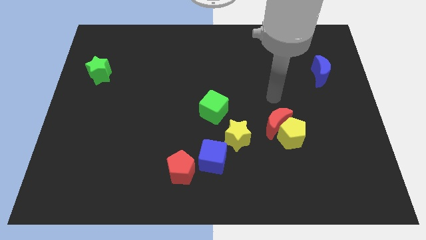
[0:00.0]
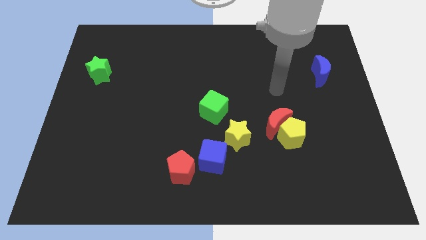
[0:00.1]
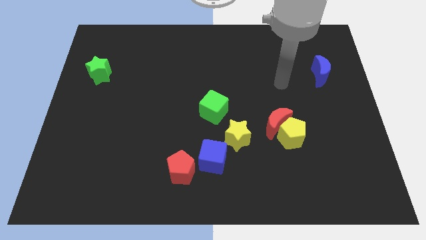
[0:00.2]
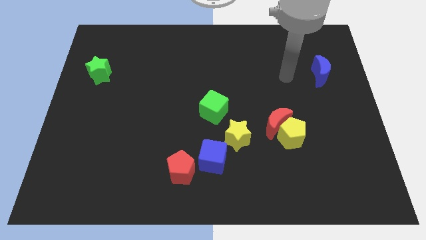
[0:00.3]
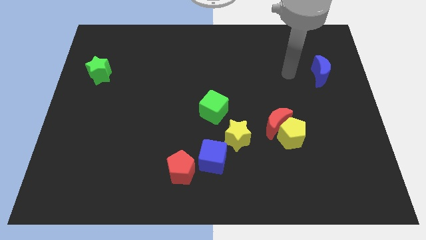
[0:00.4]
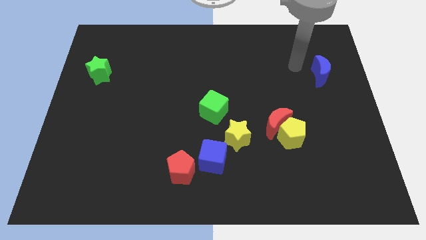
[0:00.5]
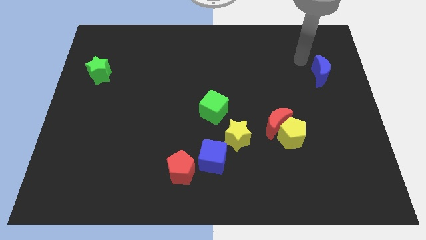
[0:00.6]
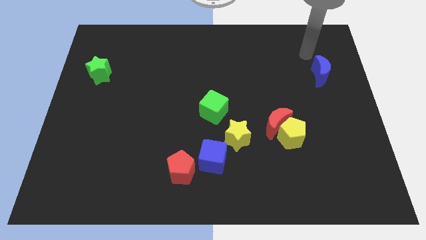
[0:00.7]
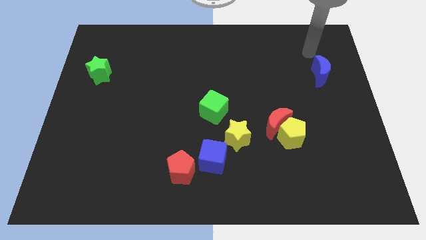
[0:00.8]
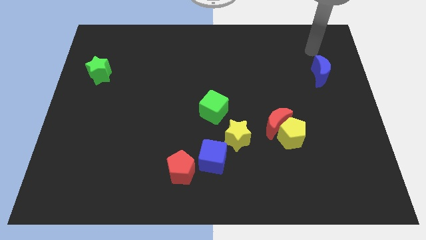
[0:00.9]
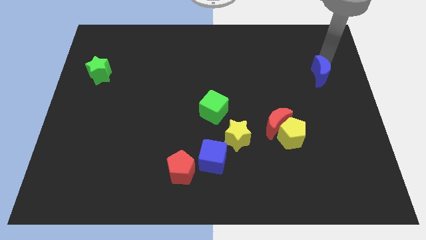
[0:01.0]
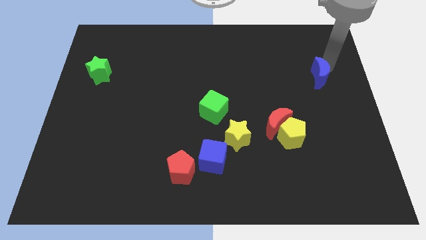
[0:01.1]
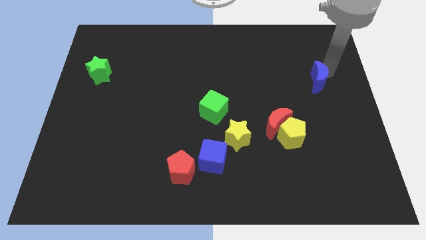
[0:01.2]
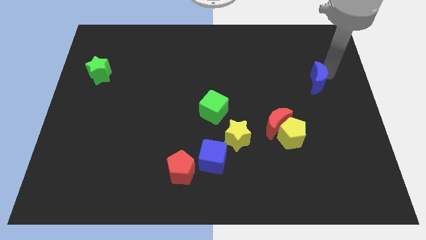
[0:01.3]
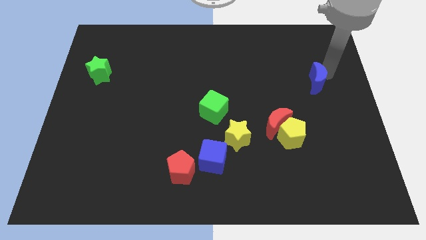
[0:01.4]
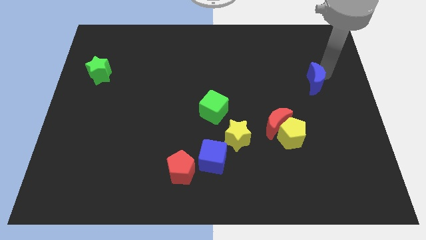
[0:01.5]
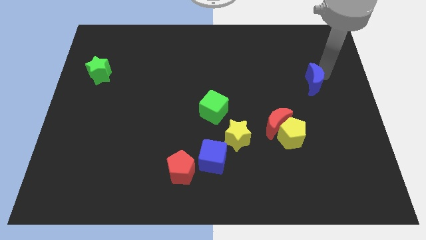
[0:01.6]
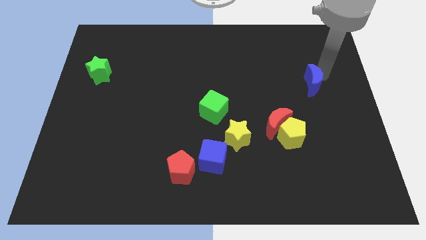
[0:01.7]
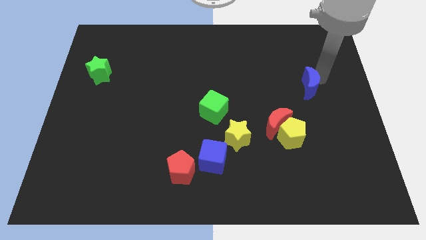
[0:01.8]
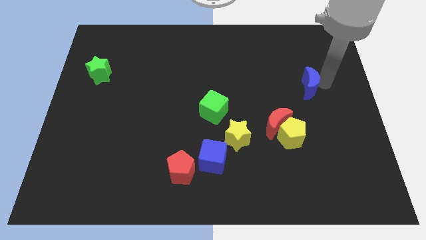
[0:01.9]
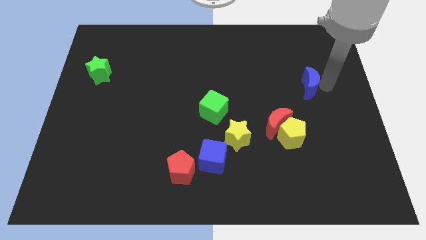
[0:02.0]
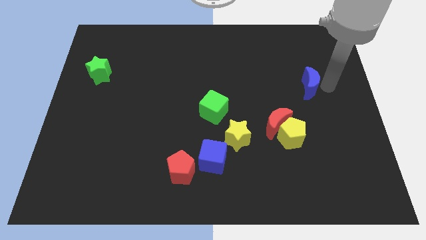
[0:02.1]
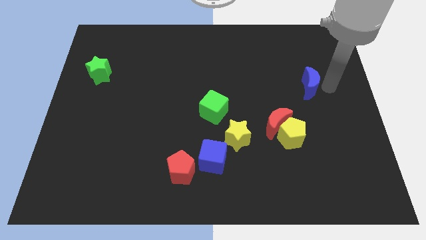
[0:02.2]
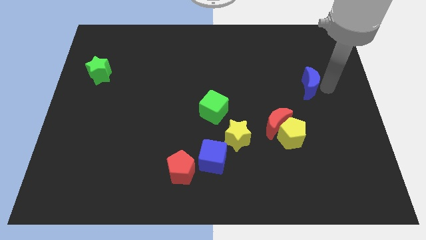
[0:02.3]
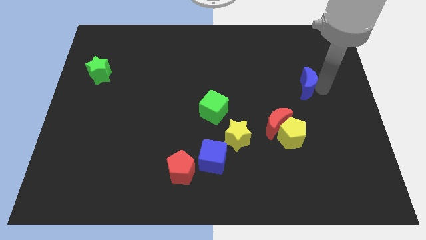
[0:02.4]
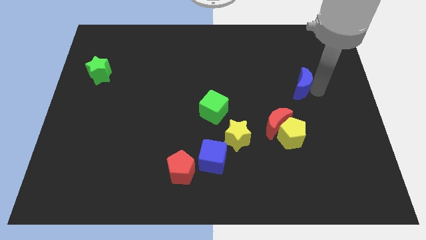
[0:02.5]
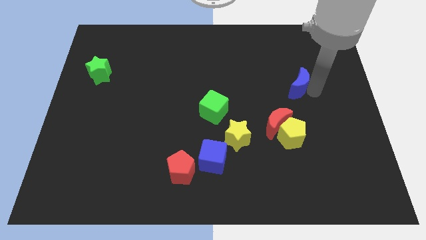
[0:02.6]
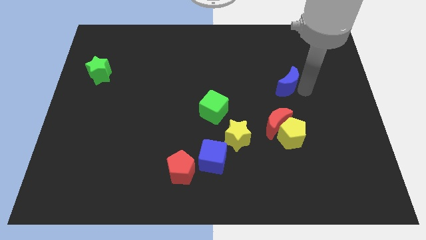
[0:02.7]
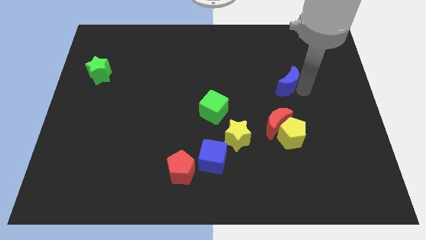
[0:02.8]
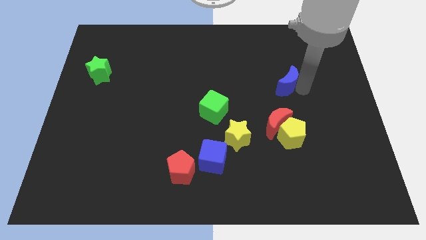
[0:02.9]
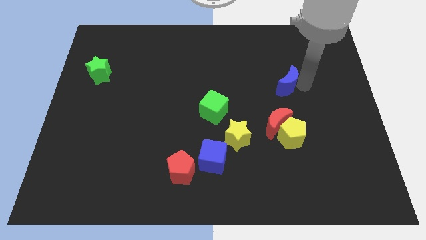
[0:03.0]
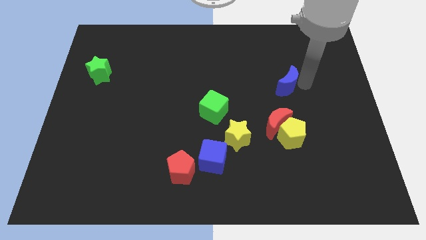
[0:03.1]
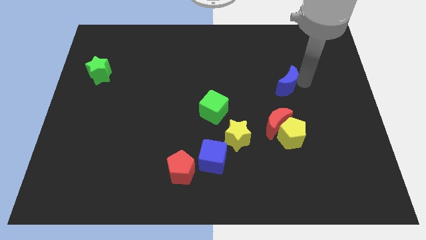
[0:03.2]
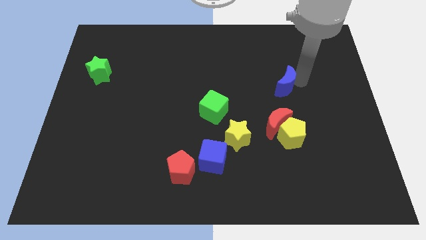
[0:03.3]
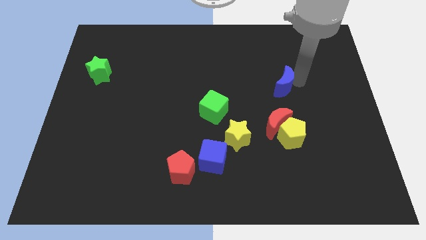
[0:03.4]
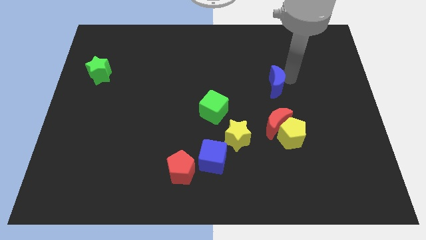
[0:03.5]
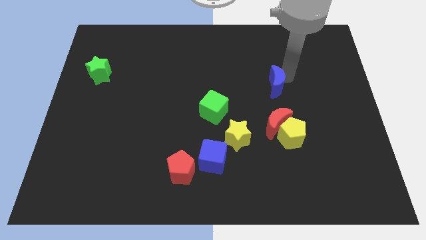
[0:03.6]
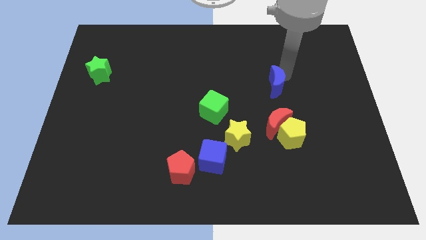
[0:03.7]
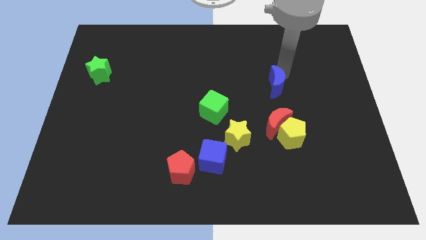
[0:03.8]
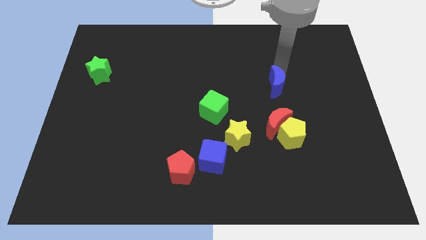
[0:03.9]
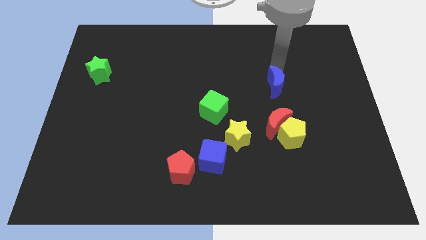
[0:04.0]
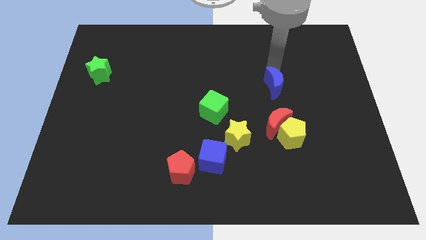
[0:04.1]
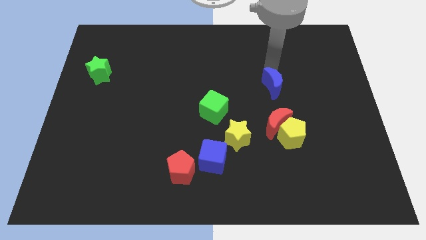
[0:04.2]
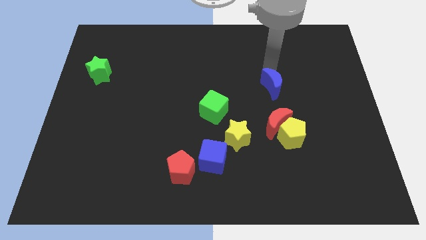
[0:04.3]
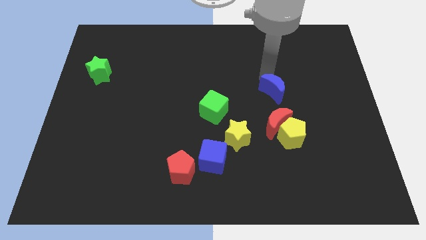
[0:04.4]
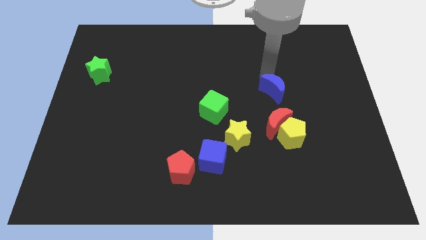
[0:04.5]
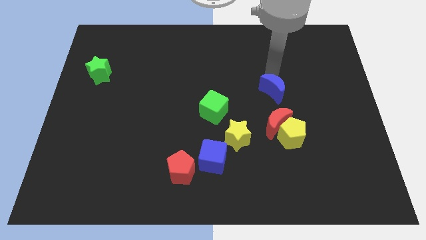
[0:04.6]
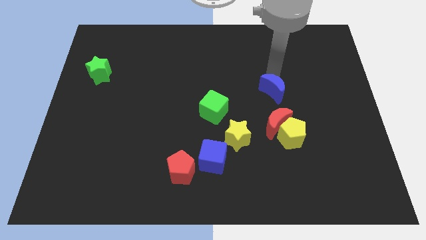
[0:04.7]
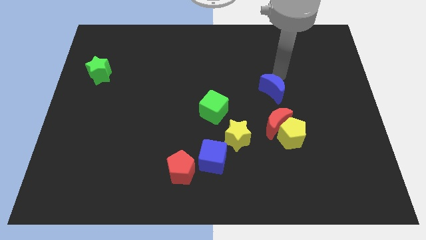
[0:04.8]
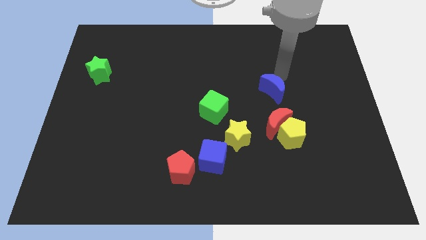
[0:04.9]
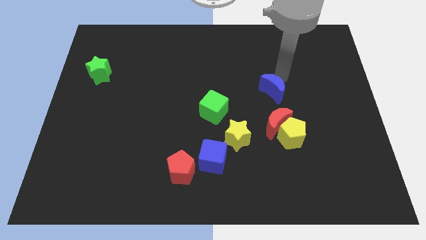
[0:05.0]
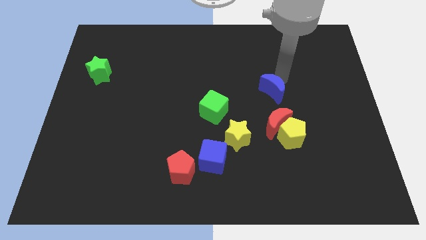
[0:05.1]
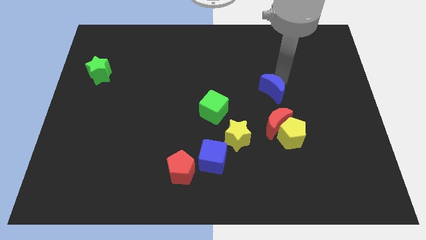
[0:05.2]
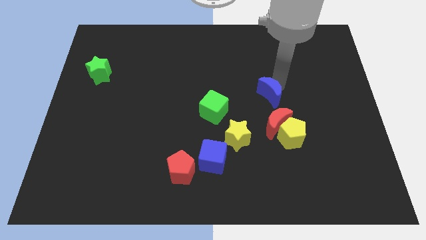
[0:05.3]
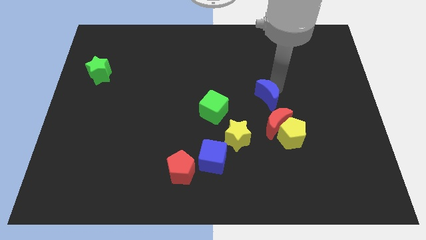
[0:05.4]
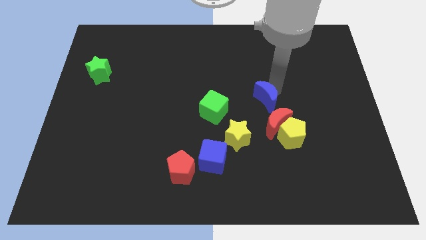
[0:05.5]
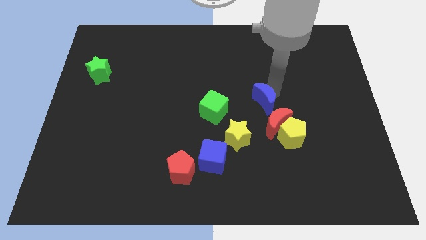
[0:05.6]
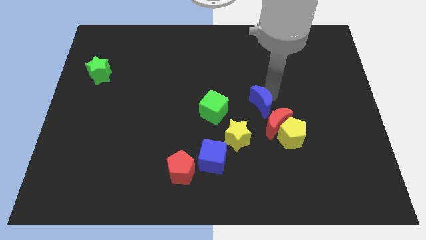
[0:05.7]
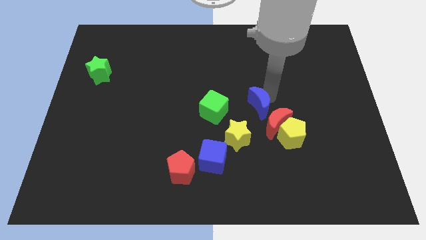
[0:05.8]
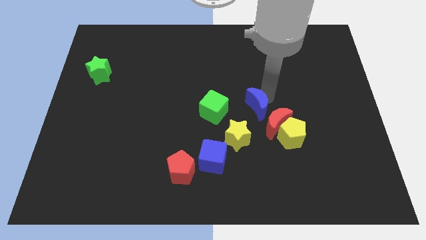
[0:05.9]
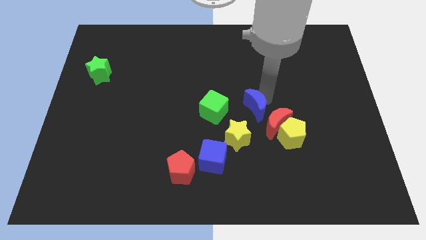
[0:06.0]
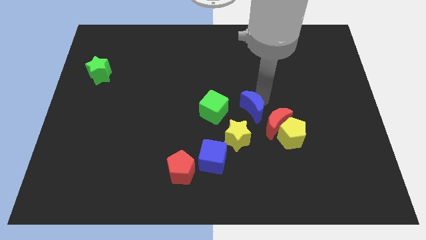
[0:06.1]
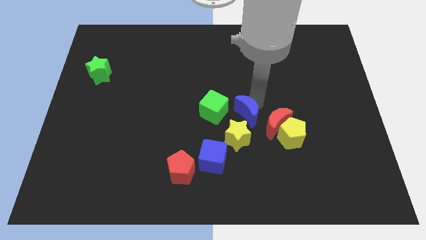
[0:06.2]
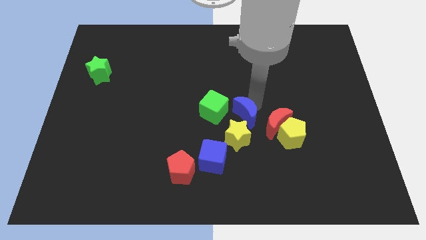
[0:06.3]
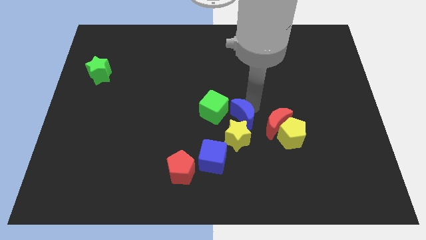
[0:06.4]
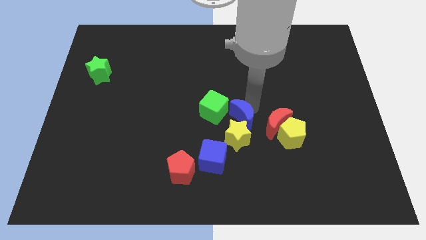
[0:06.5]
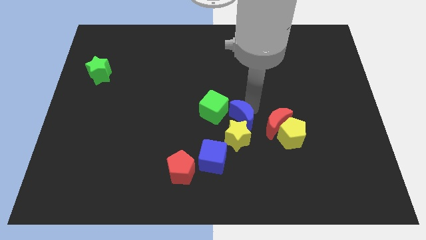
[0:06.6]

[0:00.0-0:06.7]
push the blue moon next to the yellow star

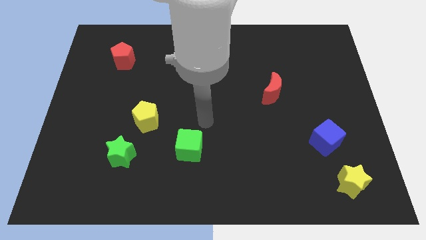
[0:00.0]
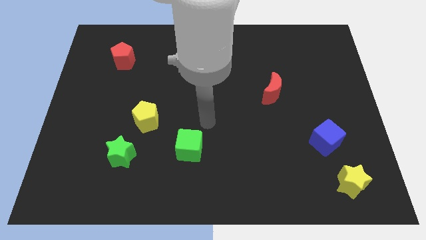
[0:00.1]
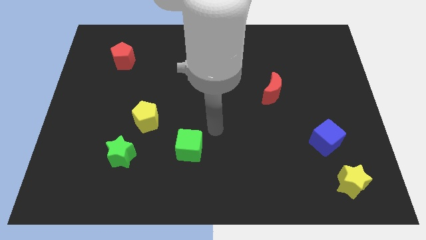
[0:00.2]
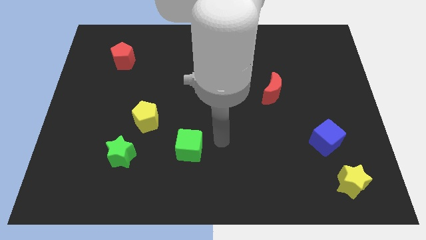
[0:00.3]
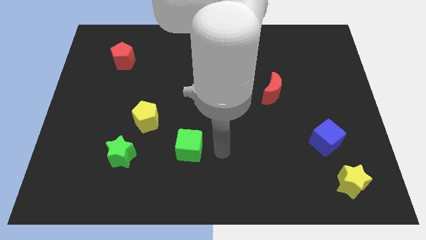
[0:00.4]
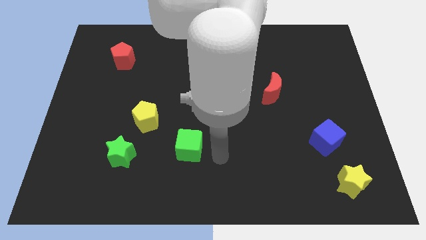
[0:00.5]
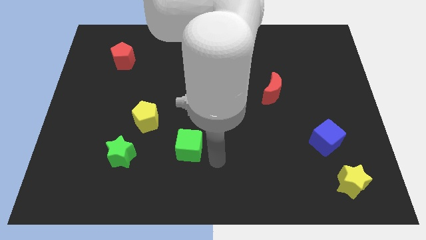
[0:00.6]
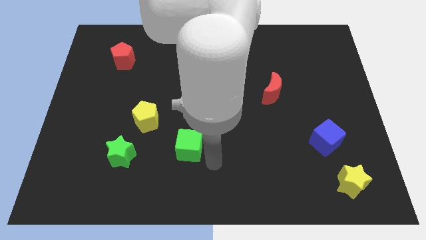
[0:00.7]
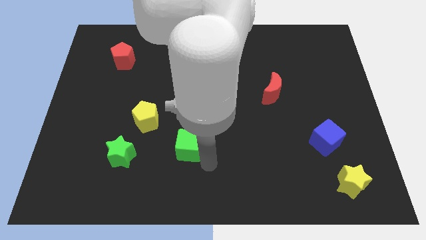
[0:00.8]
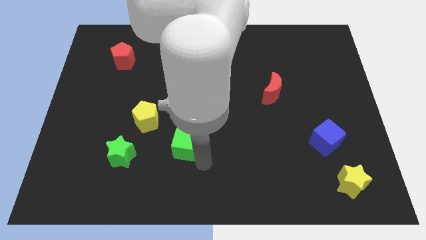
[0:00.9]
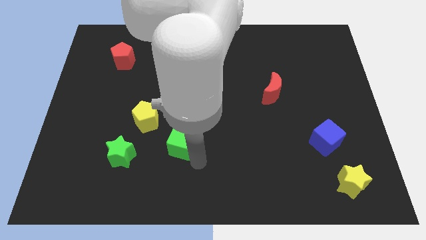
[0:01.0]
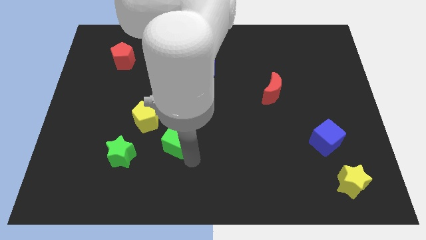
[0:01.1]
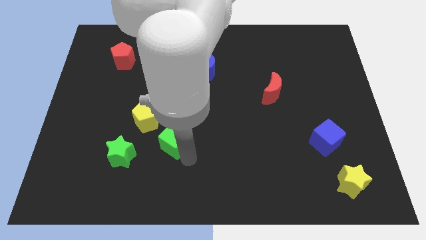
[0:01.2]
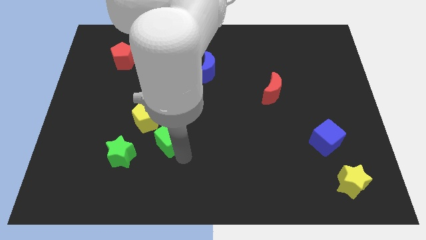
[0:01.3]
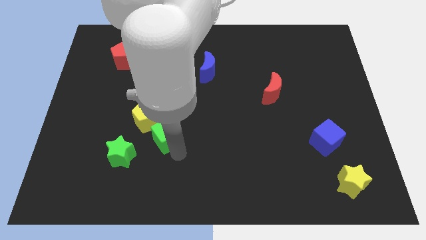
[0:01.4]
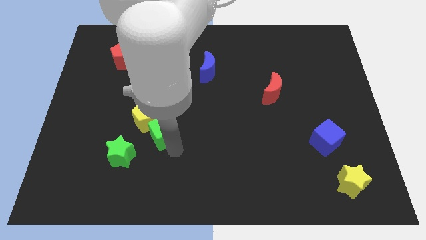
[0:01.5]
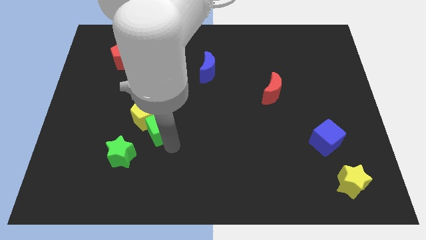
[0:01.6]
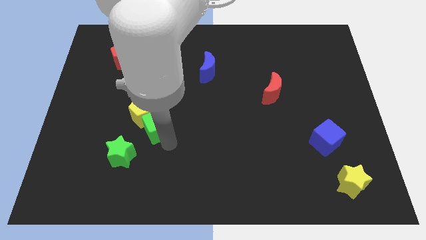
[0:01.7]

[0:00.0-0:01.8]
move the green cube next to the yellow pentagon
